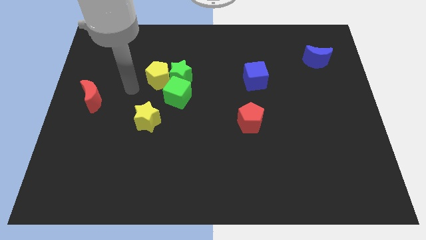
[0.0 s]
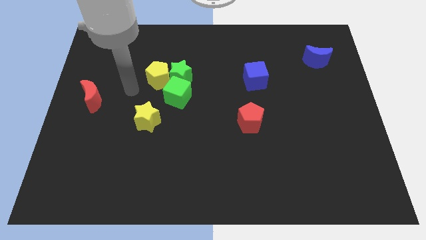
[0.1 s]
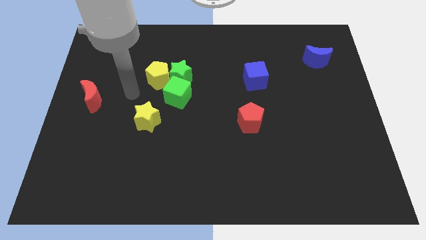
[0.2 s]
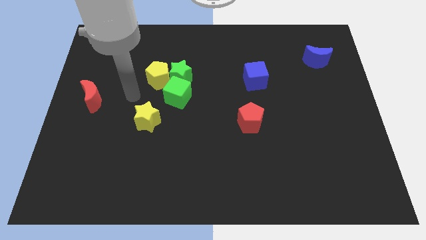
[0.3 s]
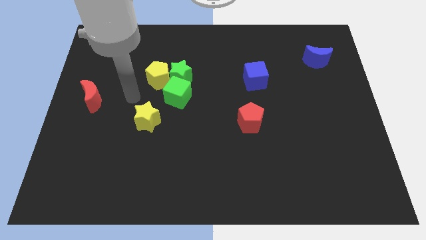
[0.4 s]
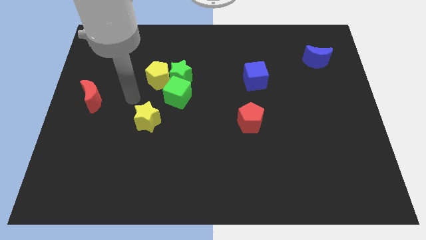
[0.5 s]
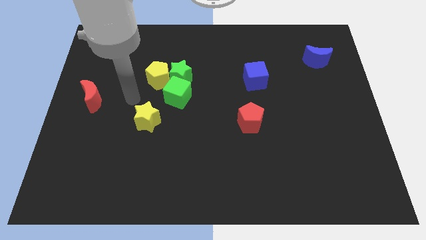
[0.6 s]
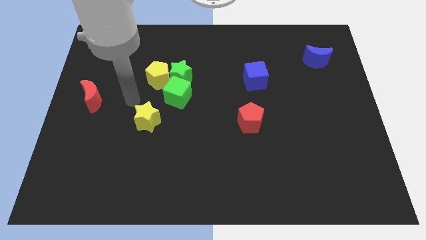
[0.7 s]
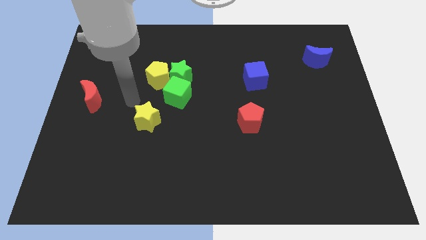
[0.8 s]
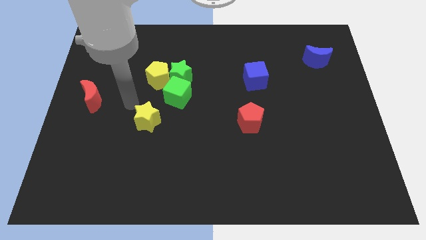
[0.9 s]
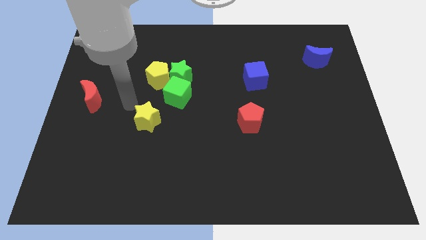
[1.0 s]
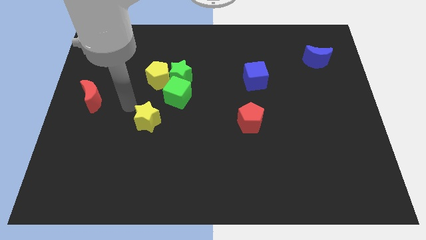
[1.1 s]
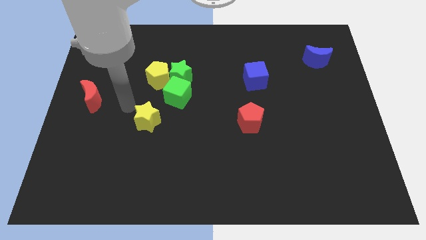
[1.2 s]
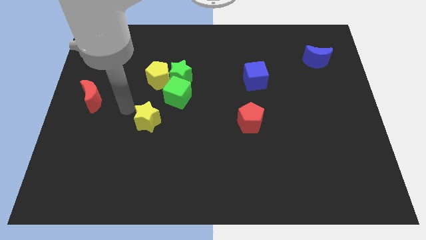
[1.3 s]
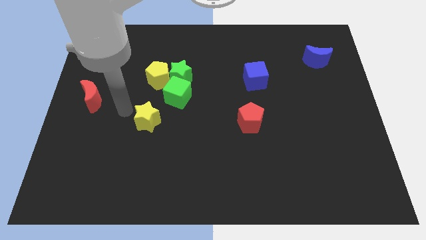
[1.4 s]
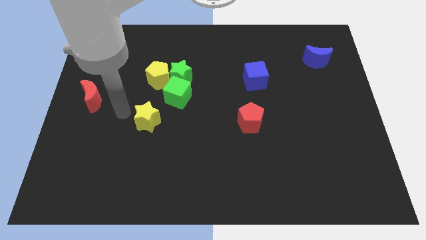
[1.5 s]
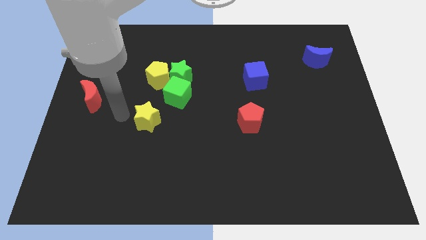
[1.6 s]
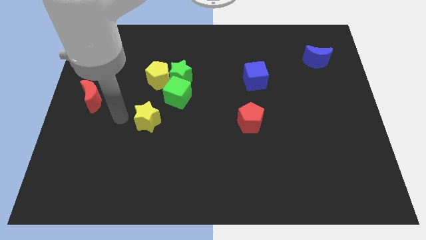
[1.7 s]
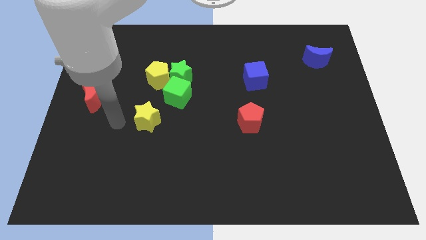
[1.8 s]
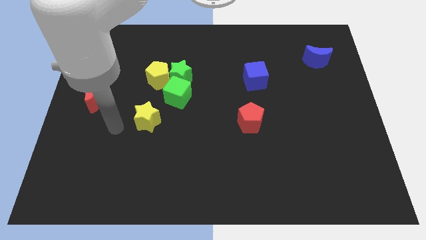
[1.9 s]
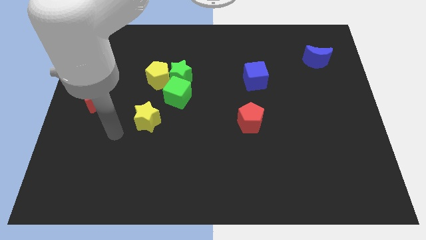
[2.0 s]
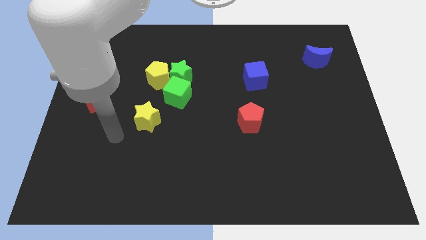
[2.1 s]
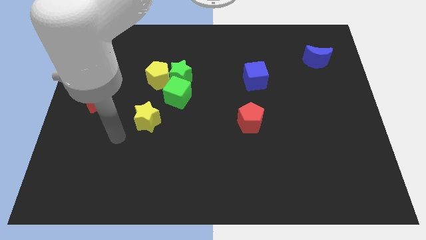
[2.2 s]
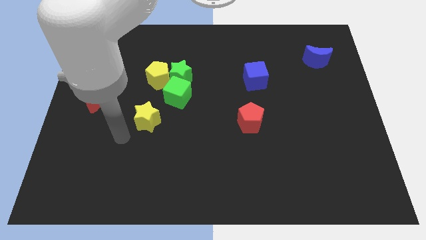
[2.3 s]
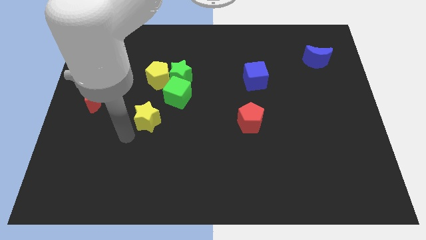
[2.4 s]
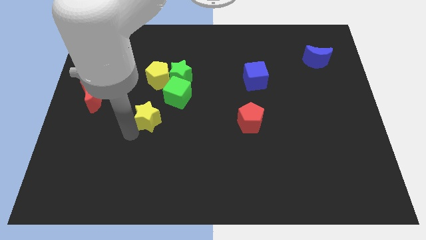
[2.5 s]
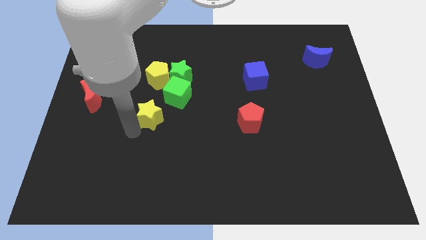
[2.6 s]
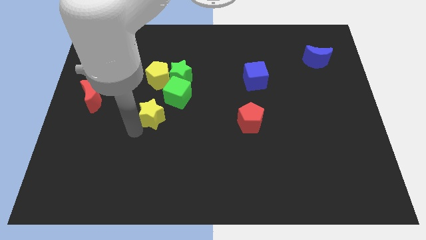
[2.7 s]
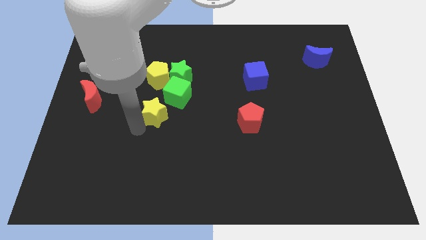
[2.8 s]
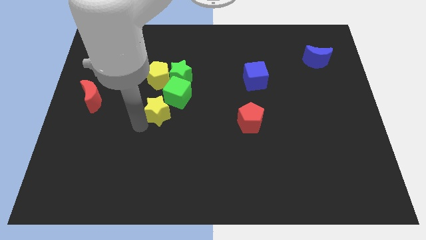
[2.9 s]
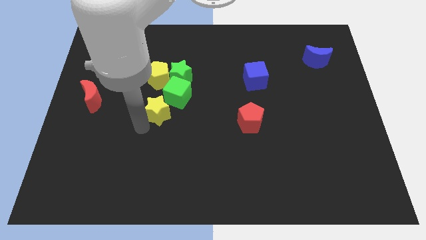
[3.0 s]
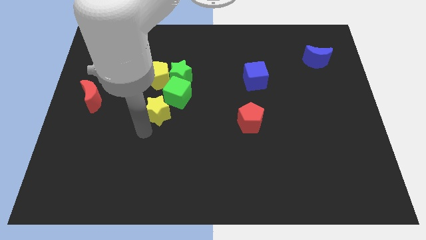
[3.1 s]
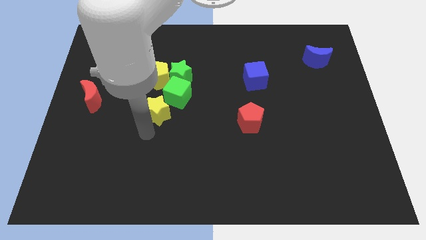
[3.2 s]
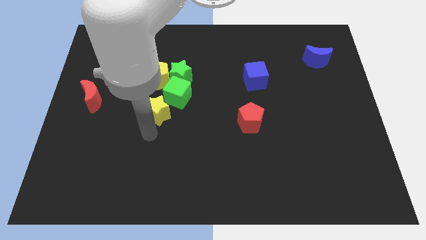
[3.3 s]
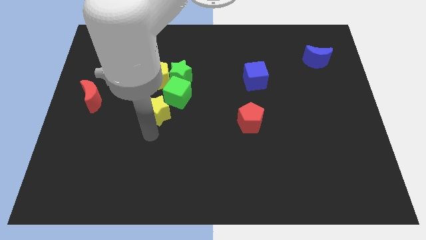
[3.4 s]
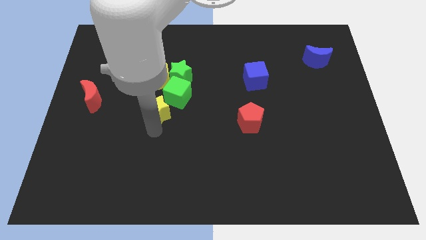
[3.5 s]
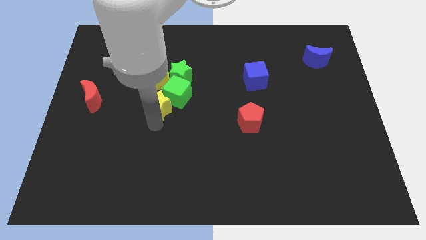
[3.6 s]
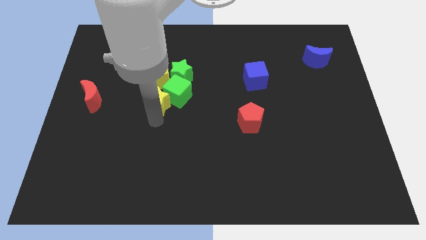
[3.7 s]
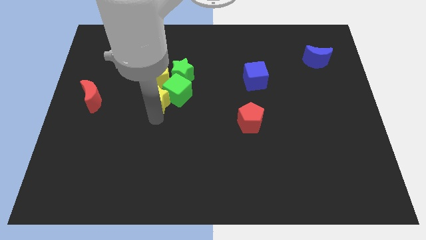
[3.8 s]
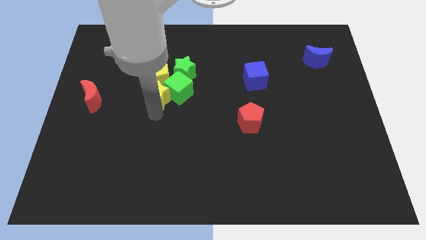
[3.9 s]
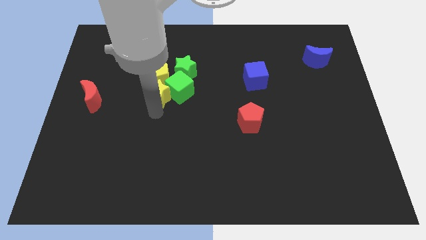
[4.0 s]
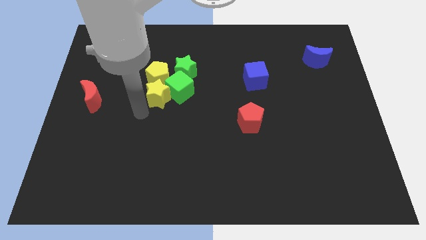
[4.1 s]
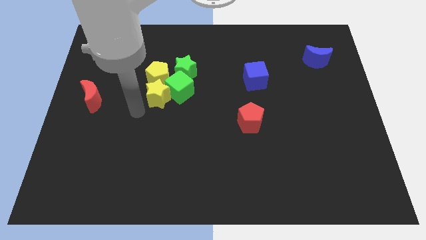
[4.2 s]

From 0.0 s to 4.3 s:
move the yellow star into the yellow pentagon

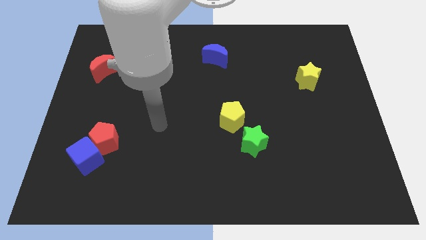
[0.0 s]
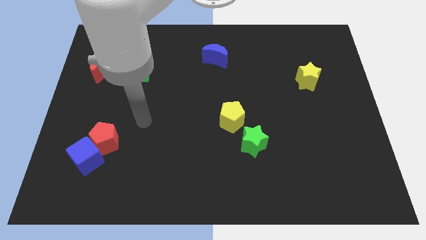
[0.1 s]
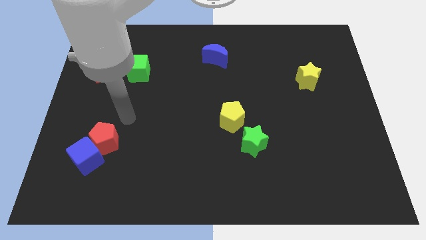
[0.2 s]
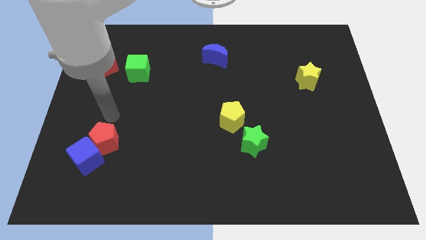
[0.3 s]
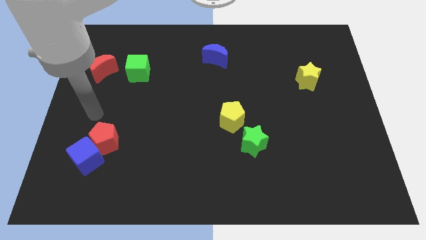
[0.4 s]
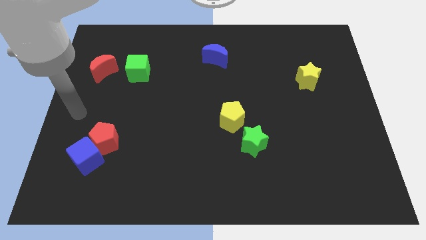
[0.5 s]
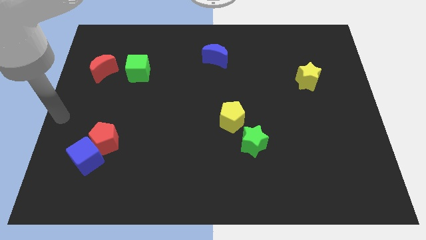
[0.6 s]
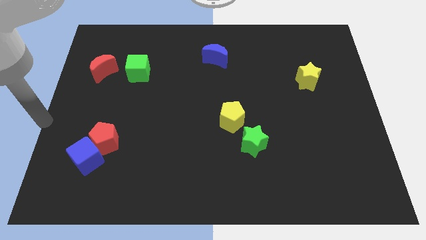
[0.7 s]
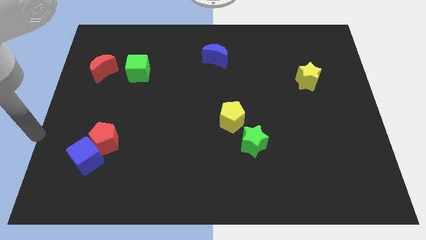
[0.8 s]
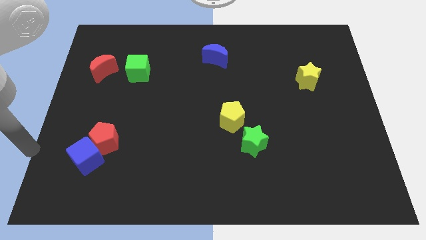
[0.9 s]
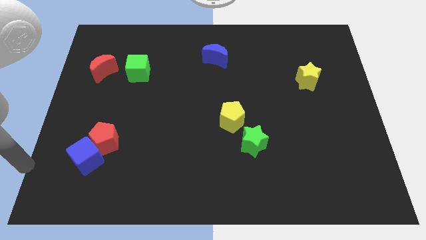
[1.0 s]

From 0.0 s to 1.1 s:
move your arm to the bottom left

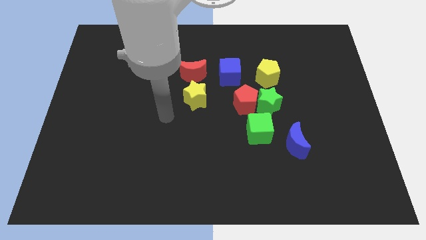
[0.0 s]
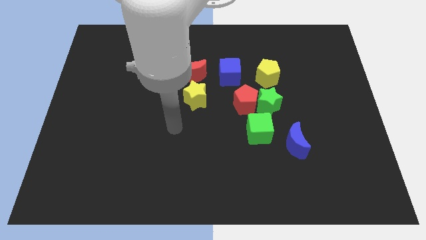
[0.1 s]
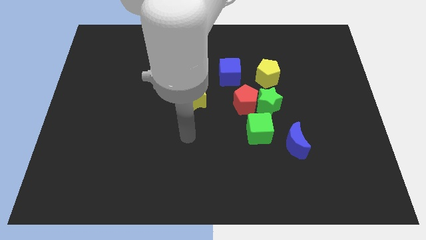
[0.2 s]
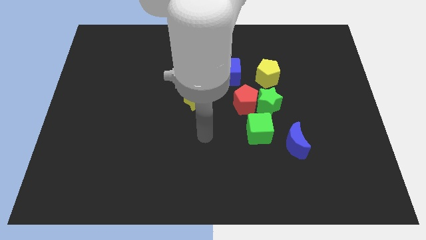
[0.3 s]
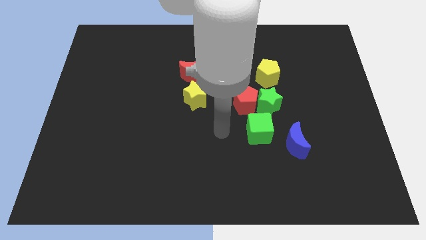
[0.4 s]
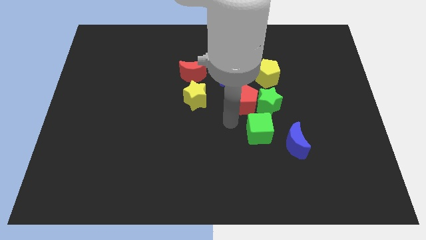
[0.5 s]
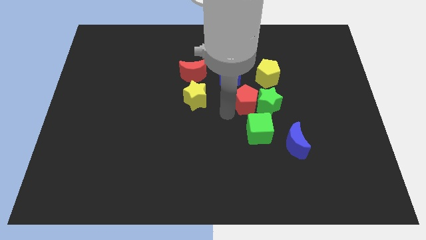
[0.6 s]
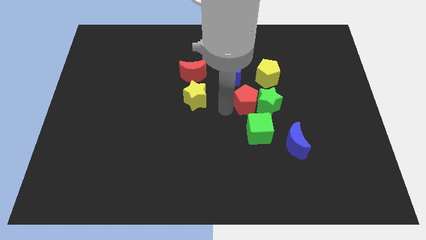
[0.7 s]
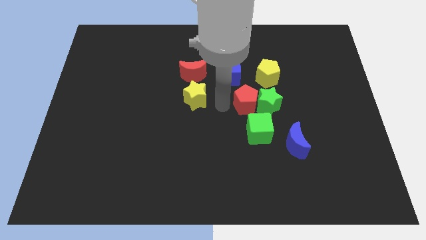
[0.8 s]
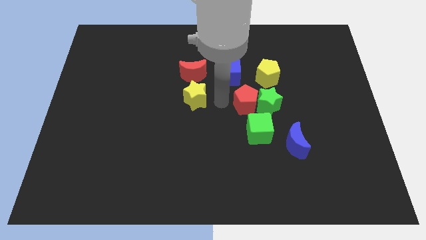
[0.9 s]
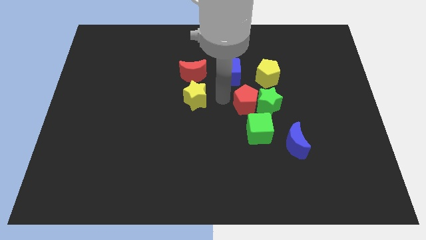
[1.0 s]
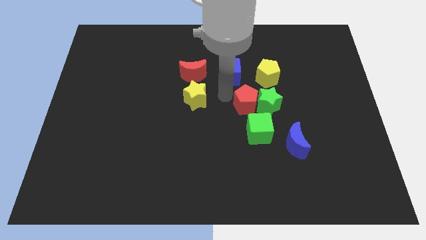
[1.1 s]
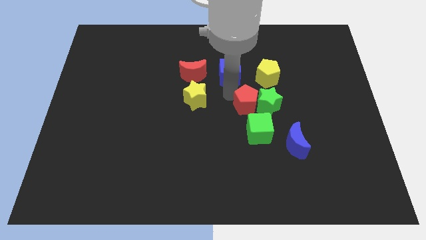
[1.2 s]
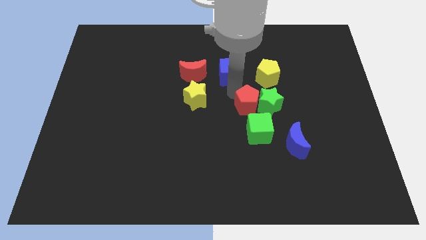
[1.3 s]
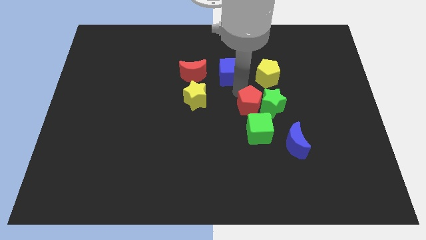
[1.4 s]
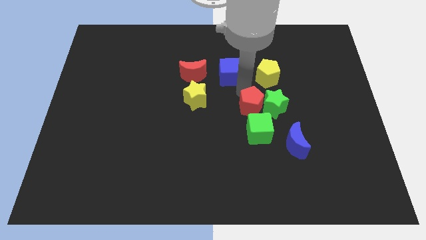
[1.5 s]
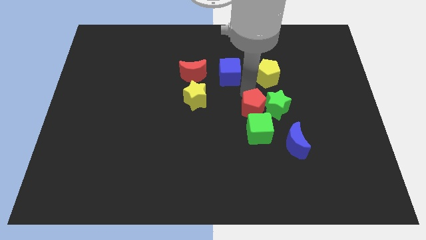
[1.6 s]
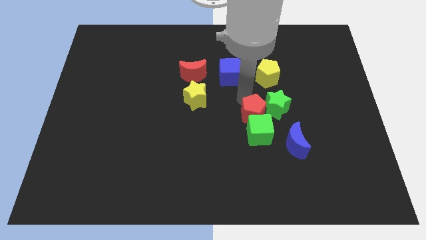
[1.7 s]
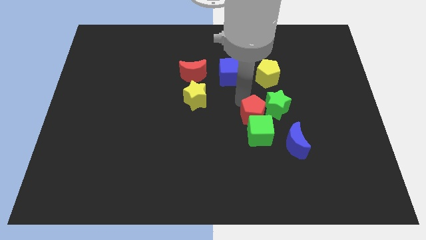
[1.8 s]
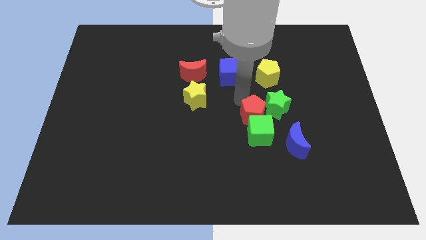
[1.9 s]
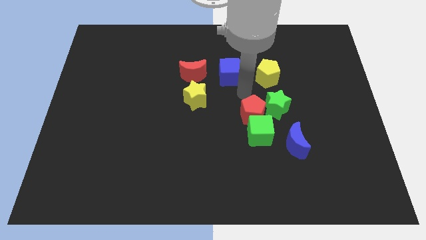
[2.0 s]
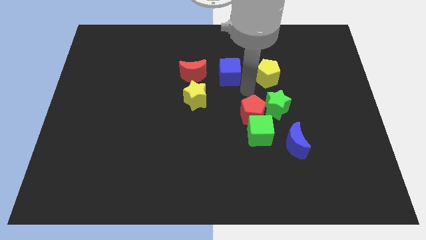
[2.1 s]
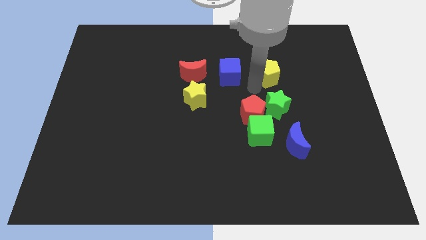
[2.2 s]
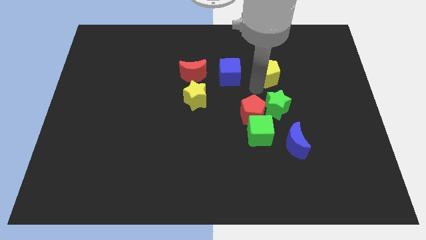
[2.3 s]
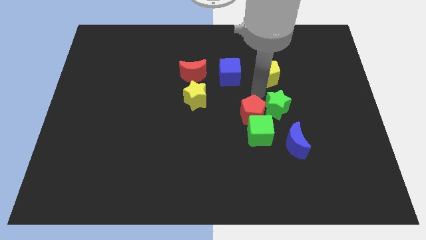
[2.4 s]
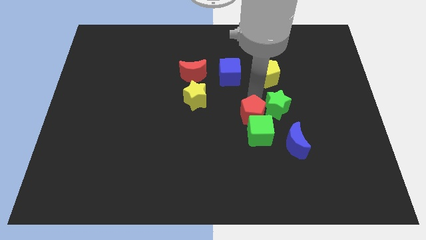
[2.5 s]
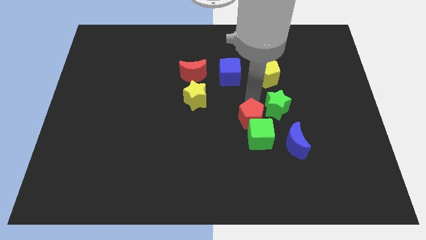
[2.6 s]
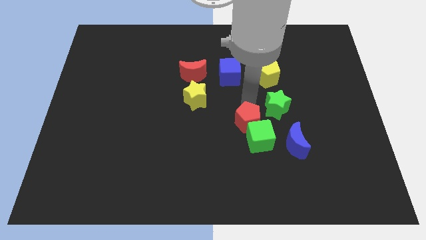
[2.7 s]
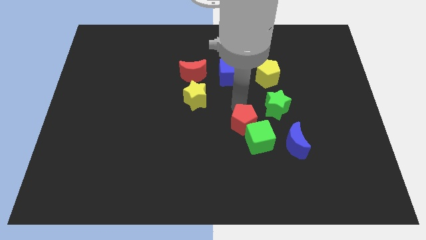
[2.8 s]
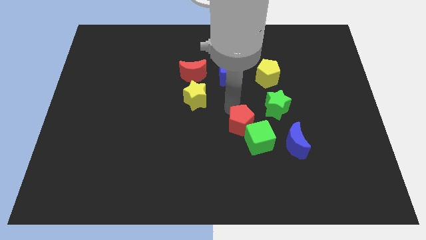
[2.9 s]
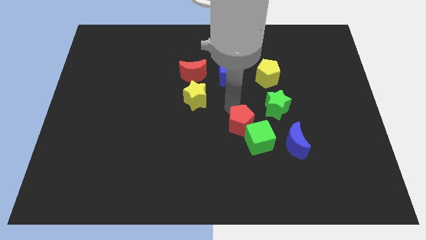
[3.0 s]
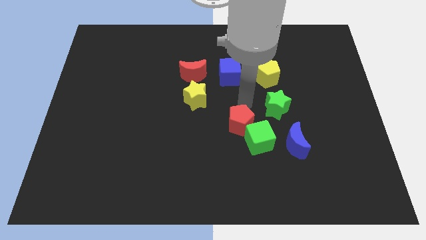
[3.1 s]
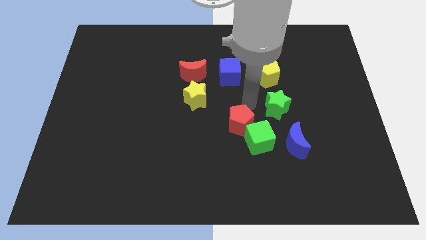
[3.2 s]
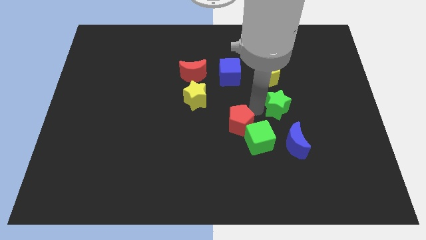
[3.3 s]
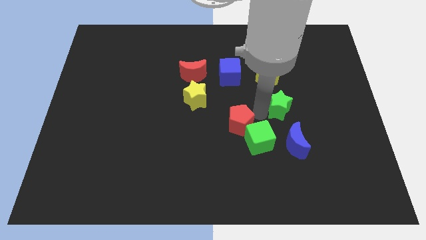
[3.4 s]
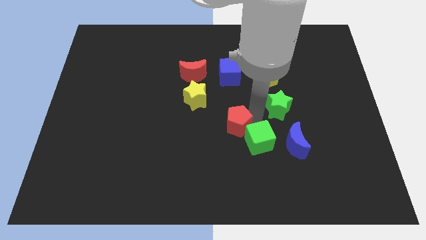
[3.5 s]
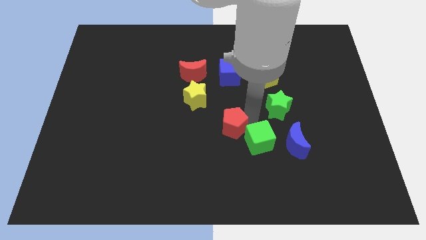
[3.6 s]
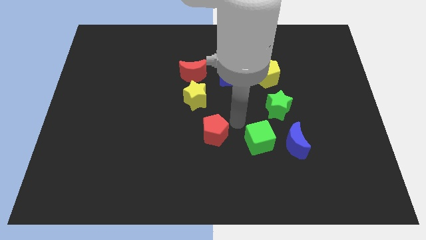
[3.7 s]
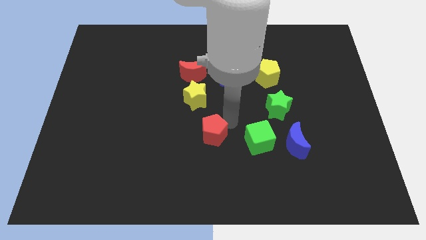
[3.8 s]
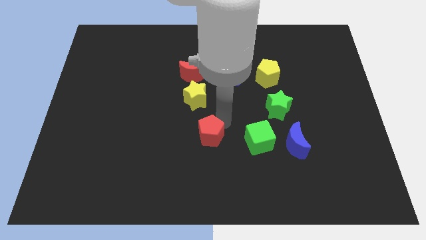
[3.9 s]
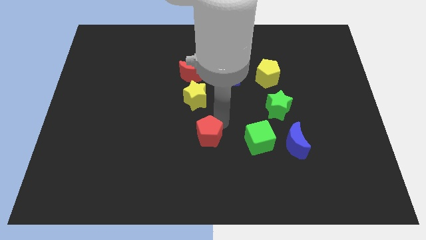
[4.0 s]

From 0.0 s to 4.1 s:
slide the red pentagon to the left side of the green cube
